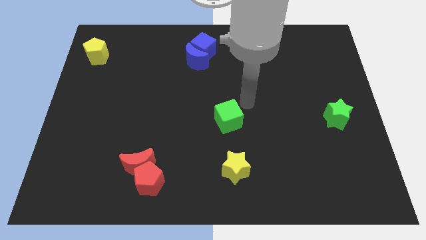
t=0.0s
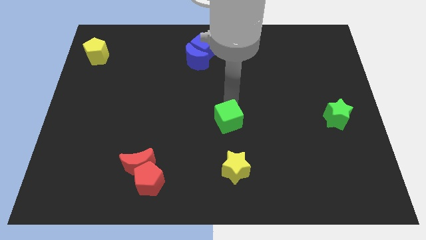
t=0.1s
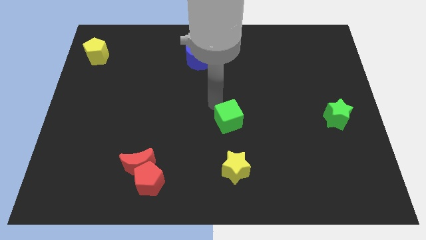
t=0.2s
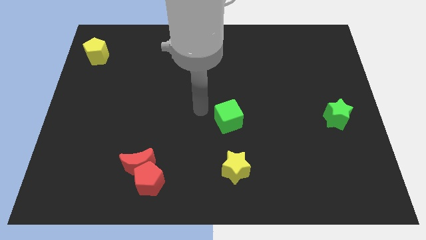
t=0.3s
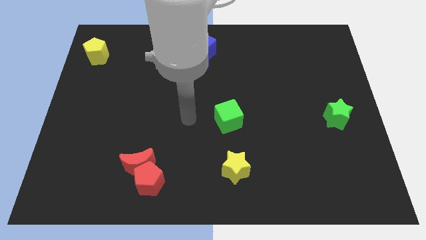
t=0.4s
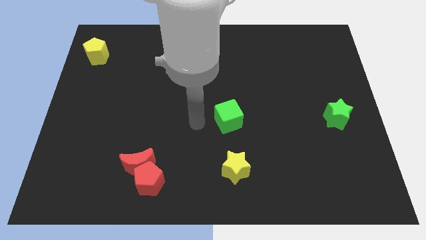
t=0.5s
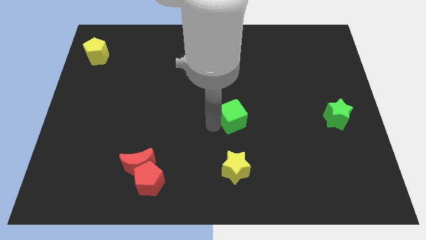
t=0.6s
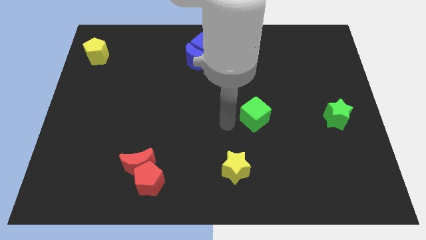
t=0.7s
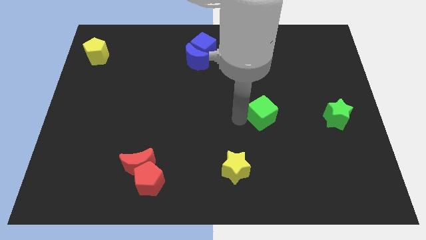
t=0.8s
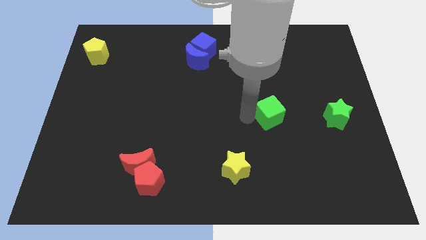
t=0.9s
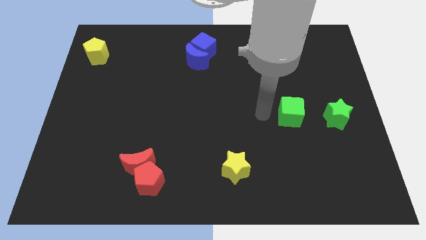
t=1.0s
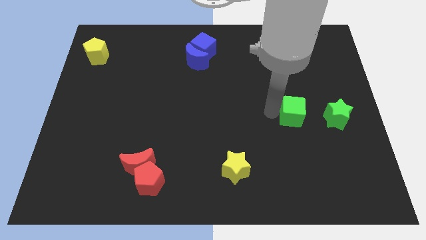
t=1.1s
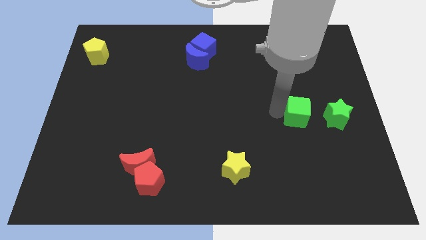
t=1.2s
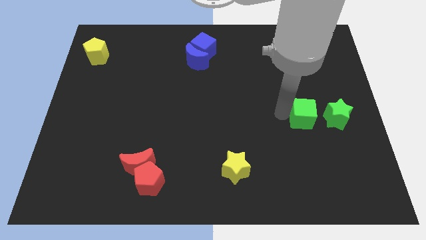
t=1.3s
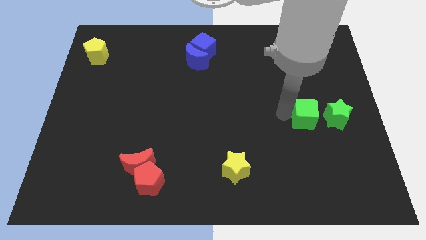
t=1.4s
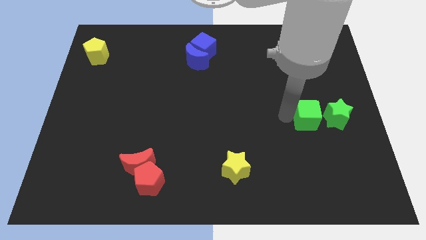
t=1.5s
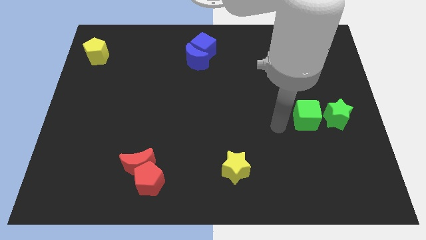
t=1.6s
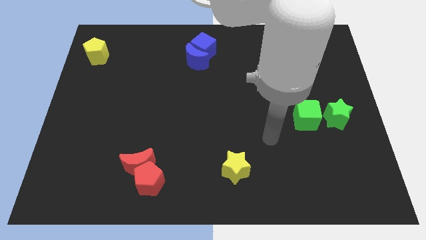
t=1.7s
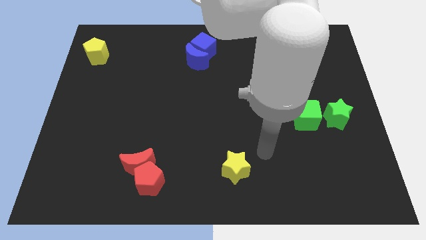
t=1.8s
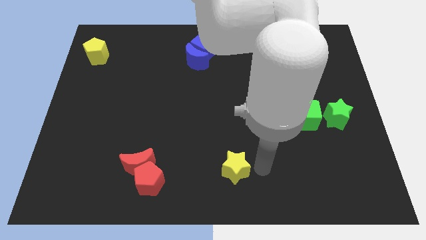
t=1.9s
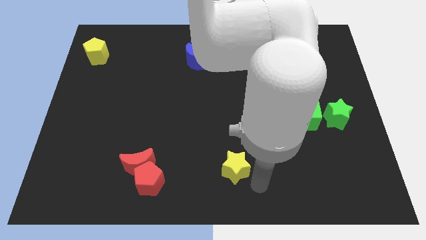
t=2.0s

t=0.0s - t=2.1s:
push the green cube to the left side of the green star

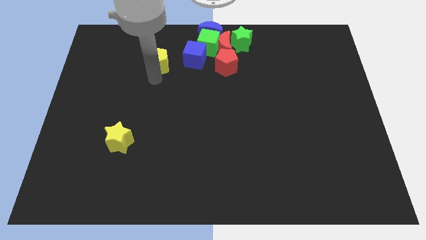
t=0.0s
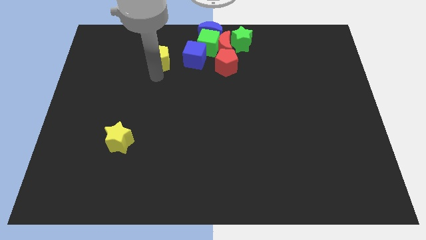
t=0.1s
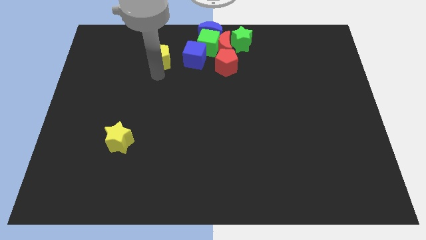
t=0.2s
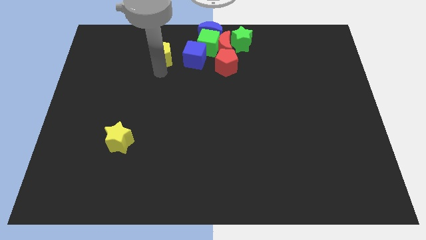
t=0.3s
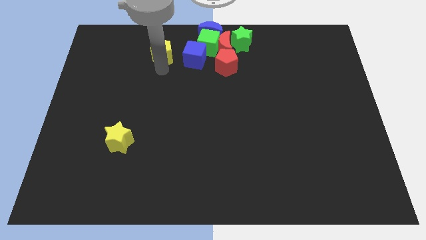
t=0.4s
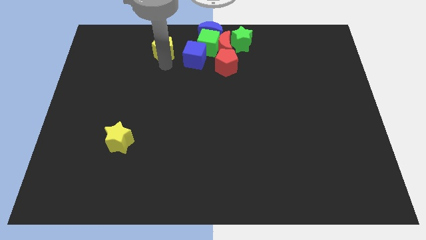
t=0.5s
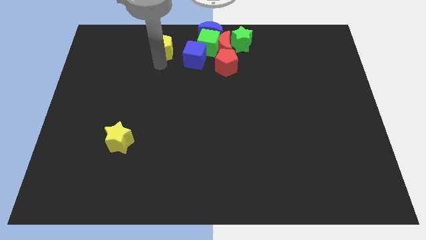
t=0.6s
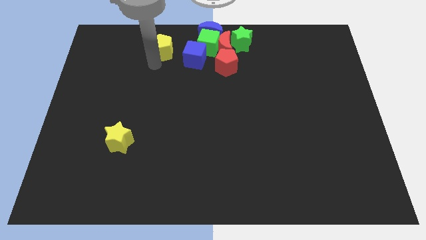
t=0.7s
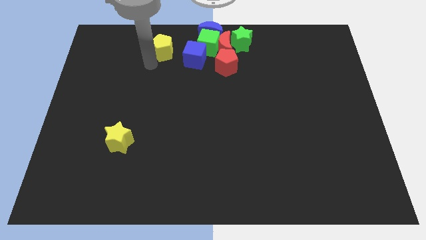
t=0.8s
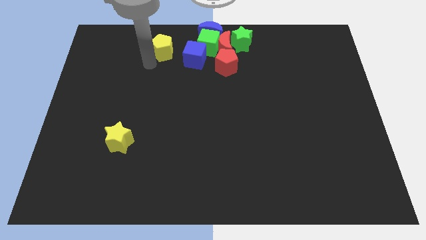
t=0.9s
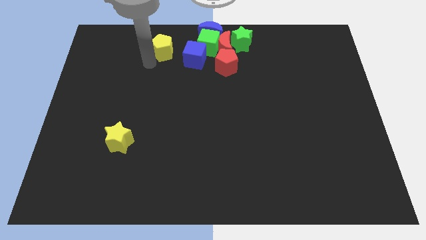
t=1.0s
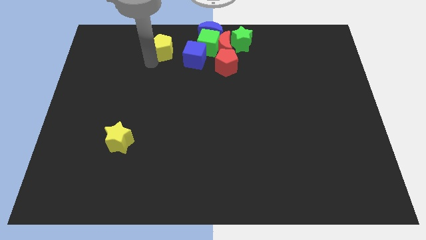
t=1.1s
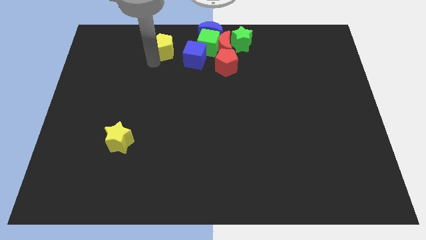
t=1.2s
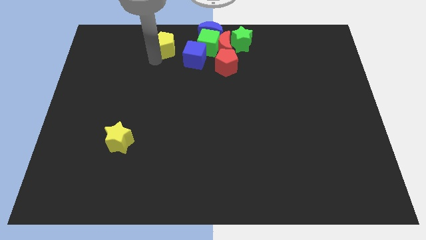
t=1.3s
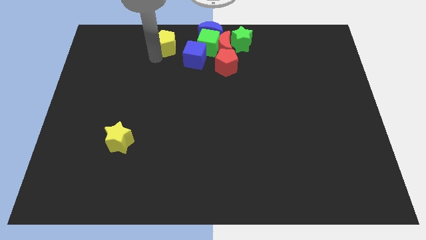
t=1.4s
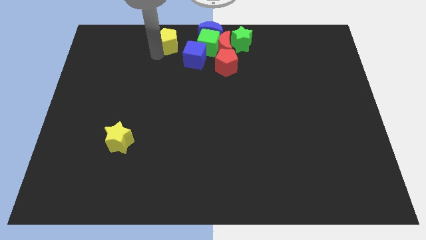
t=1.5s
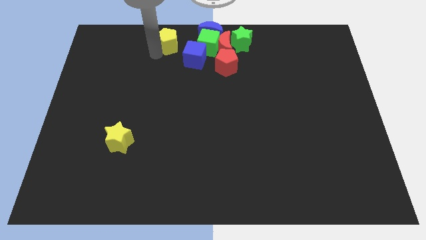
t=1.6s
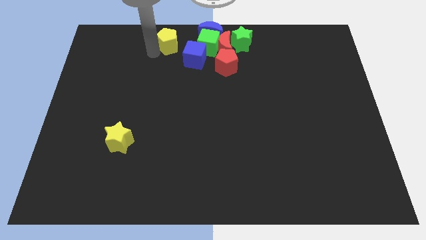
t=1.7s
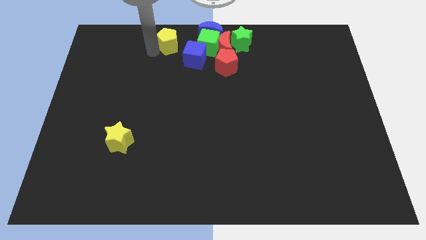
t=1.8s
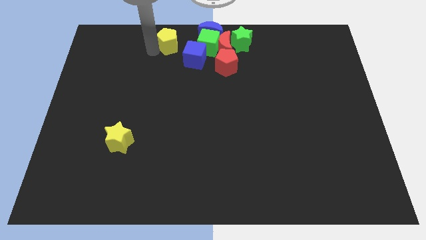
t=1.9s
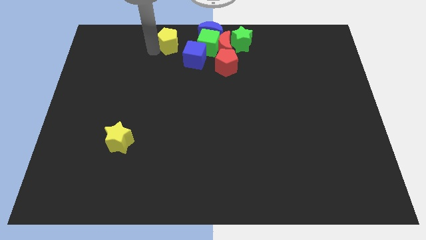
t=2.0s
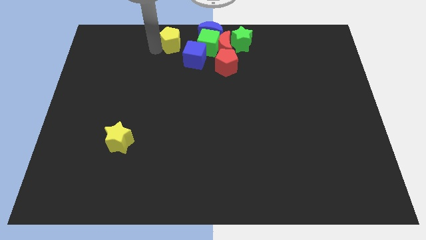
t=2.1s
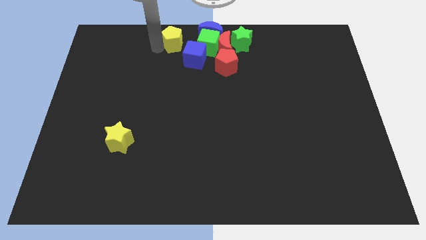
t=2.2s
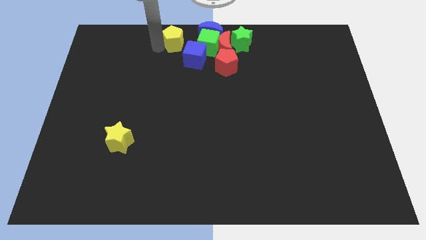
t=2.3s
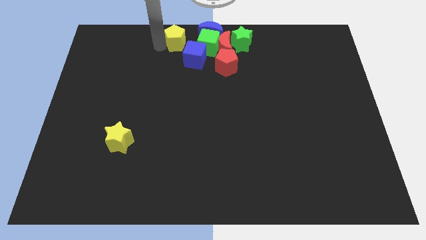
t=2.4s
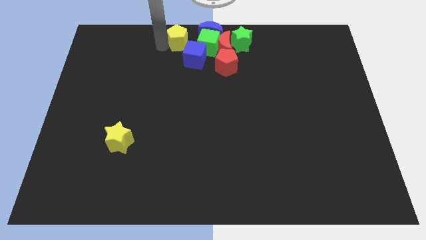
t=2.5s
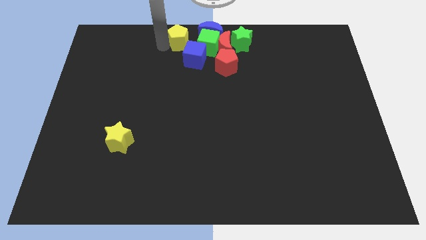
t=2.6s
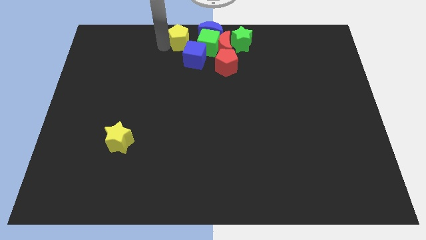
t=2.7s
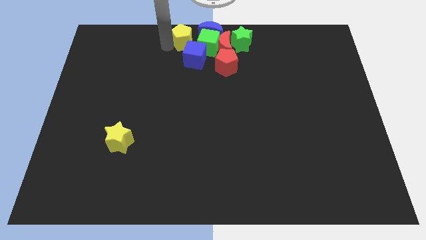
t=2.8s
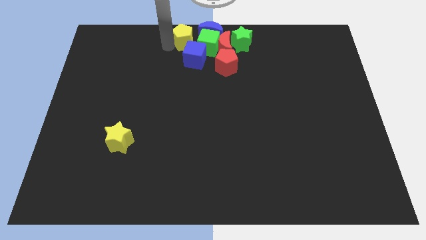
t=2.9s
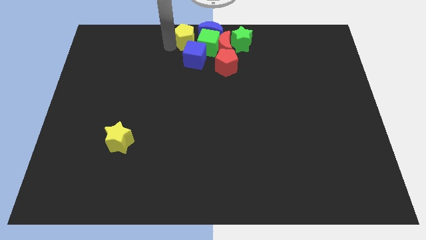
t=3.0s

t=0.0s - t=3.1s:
move the yellow pentagon close to the left side of the green cube

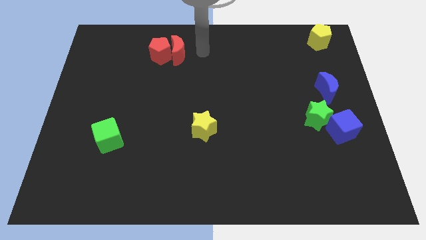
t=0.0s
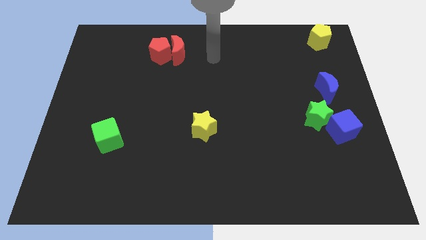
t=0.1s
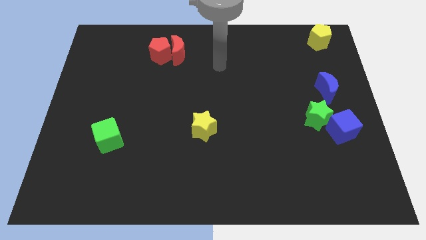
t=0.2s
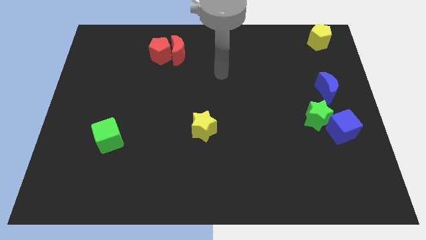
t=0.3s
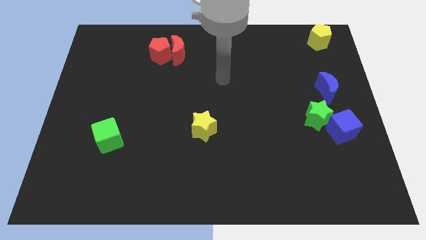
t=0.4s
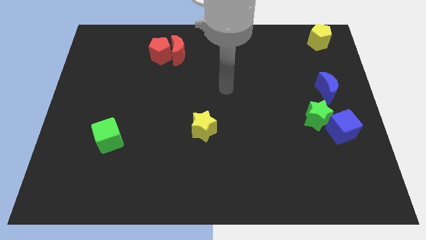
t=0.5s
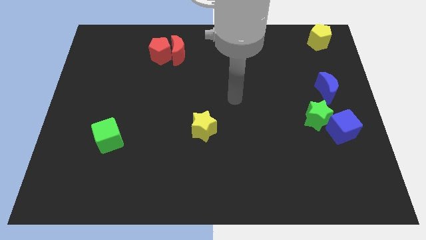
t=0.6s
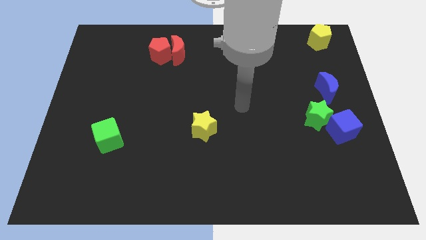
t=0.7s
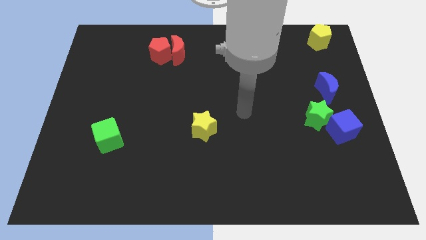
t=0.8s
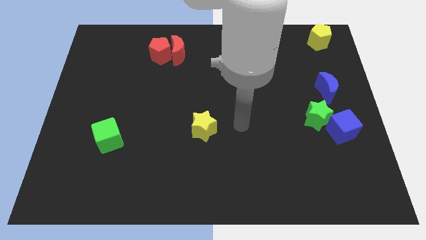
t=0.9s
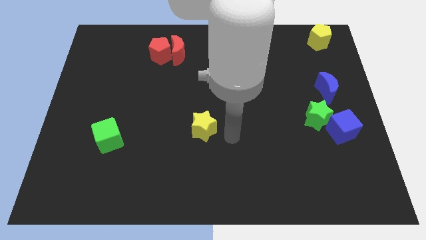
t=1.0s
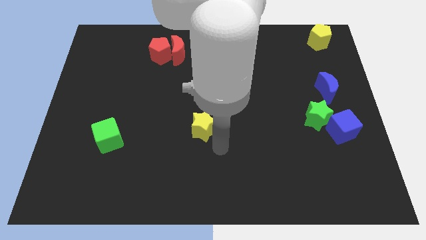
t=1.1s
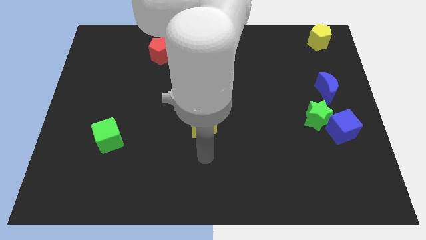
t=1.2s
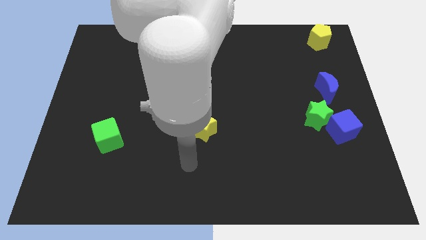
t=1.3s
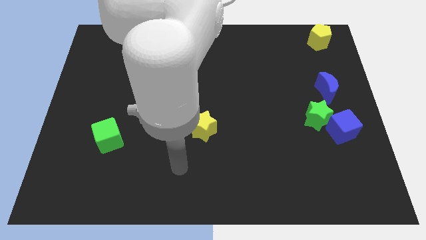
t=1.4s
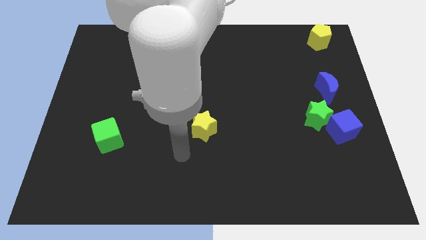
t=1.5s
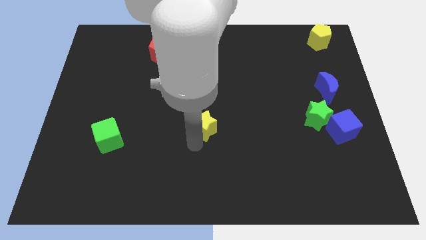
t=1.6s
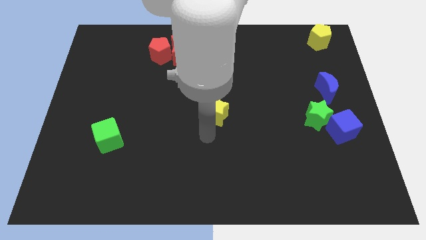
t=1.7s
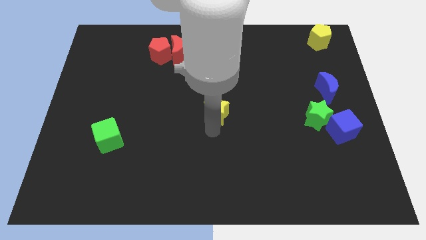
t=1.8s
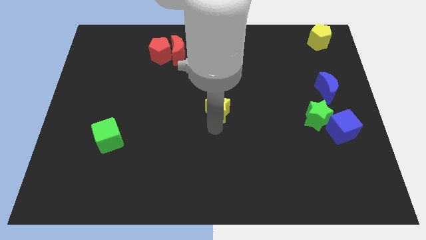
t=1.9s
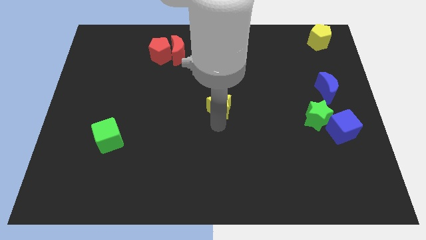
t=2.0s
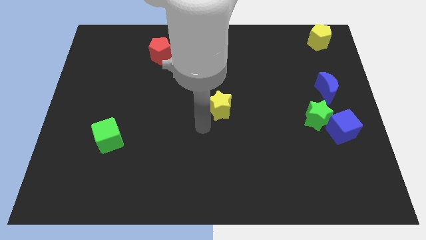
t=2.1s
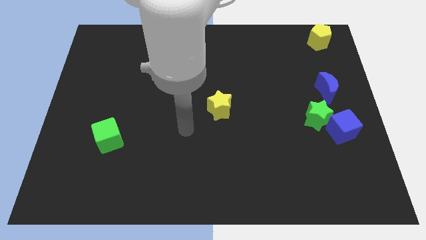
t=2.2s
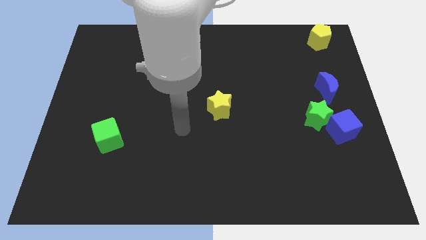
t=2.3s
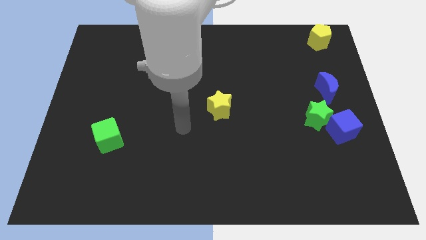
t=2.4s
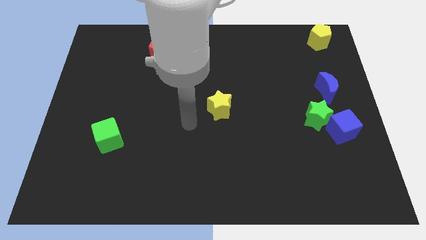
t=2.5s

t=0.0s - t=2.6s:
place the yellow star at the center of the board

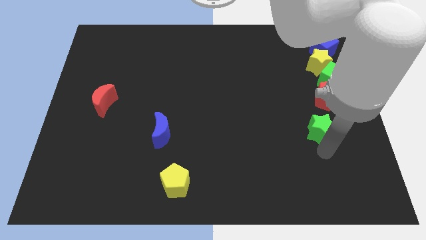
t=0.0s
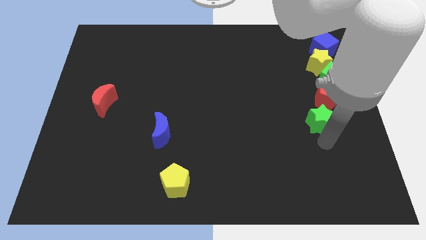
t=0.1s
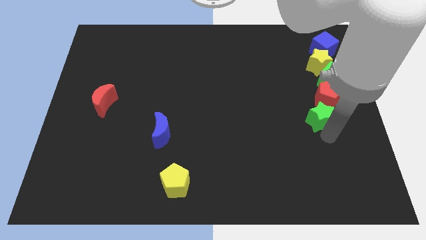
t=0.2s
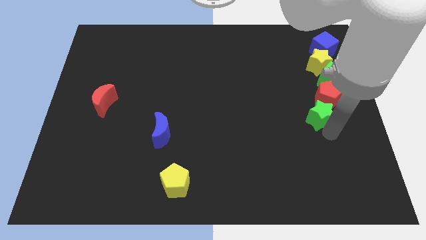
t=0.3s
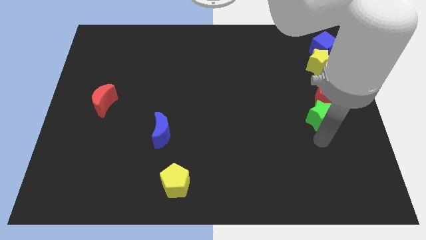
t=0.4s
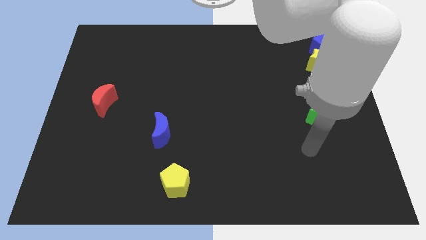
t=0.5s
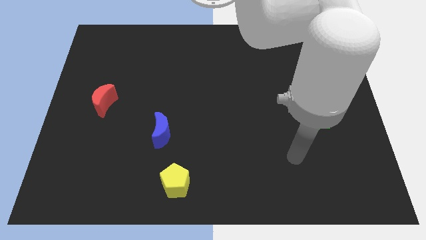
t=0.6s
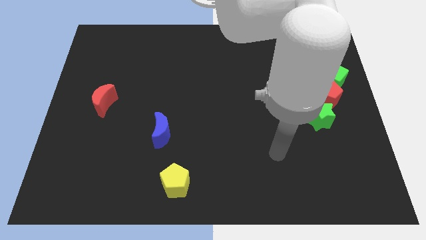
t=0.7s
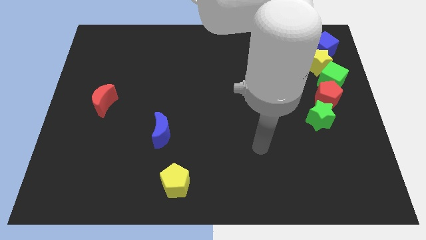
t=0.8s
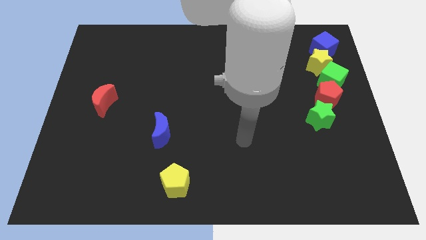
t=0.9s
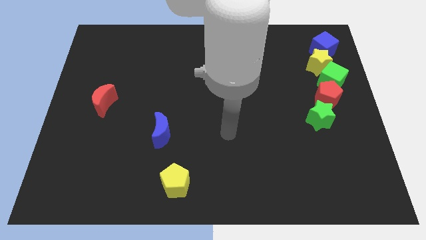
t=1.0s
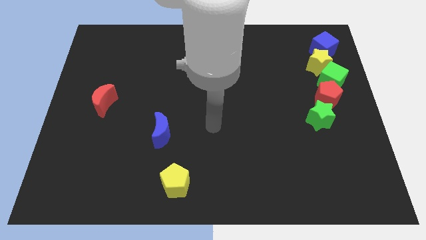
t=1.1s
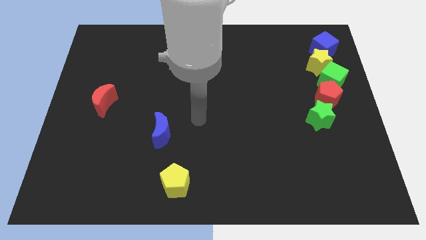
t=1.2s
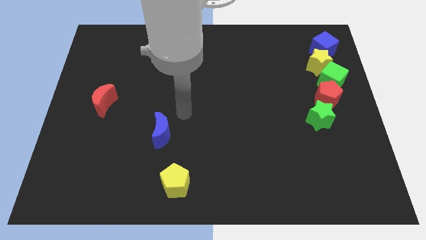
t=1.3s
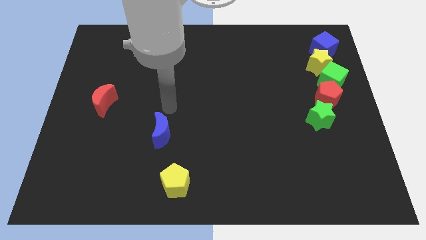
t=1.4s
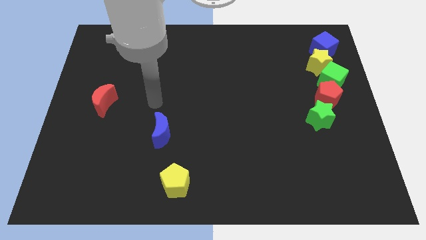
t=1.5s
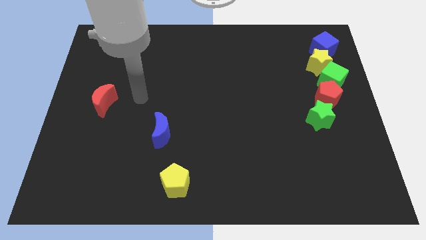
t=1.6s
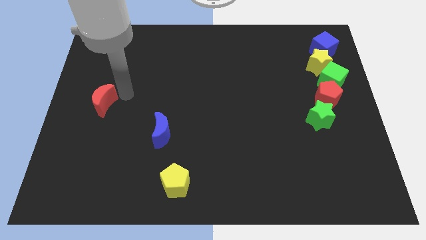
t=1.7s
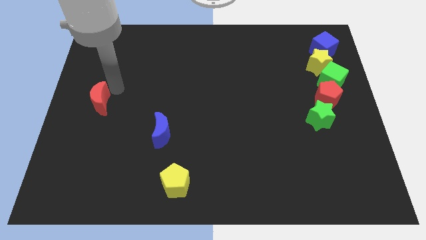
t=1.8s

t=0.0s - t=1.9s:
drag the green star and place it below the red pentagon
